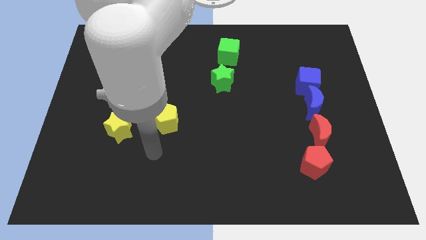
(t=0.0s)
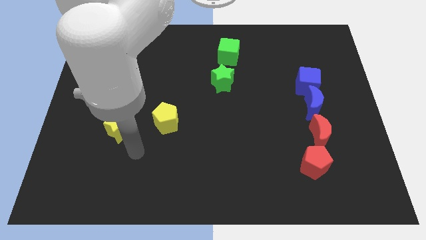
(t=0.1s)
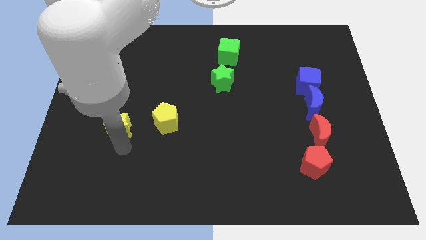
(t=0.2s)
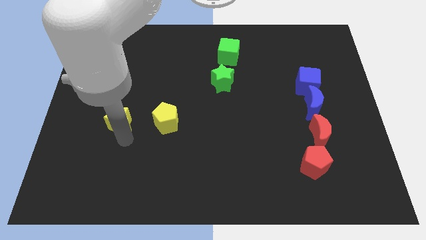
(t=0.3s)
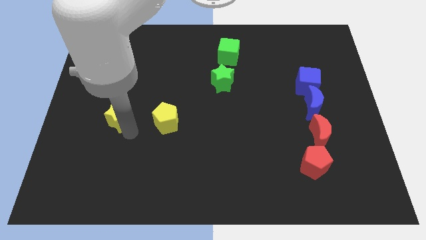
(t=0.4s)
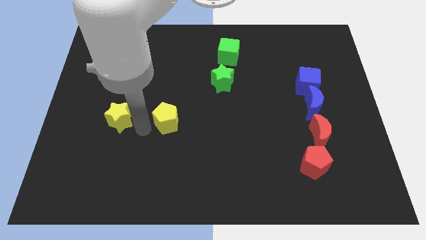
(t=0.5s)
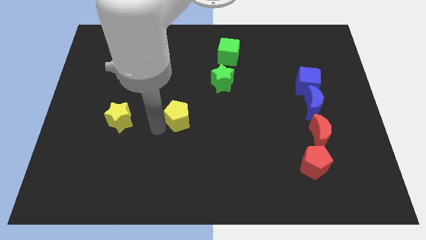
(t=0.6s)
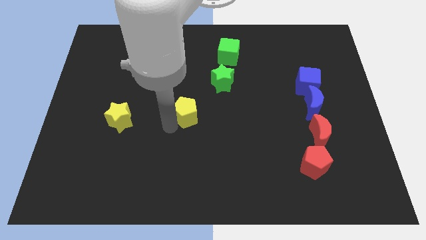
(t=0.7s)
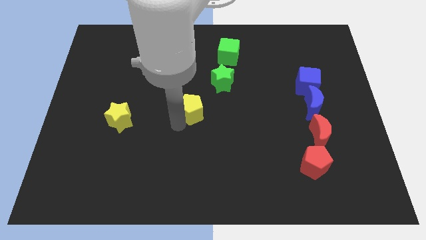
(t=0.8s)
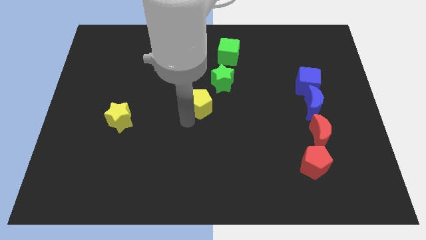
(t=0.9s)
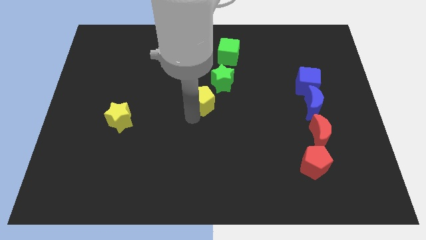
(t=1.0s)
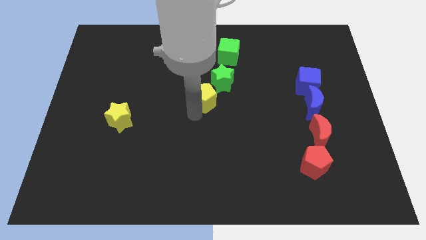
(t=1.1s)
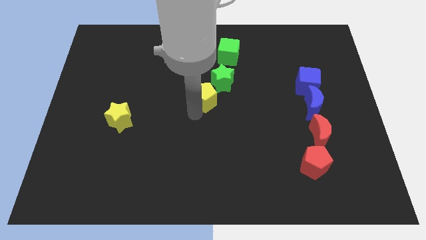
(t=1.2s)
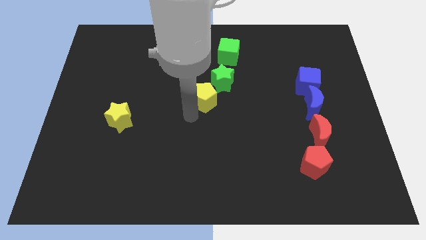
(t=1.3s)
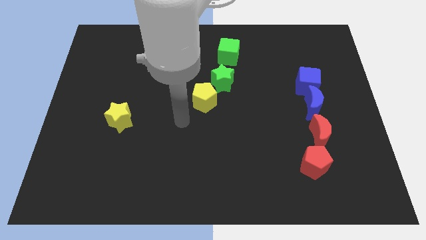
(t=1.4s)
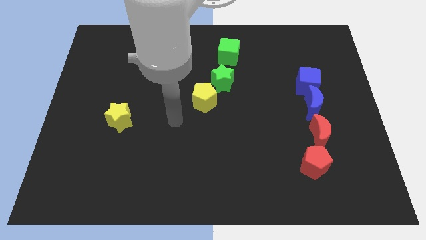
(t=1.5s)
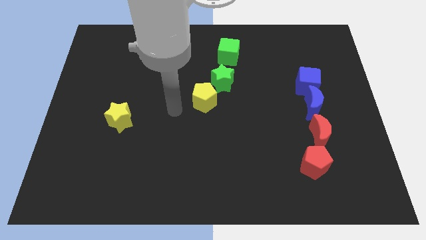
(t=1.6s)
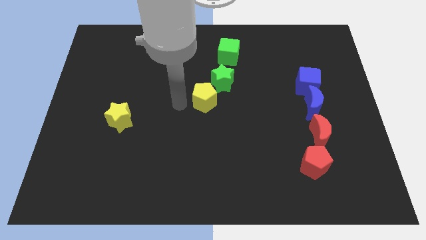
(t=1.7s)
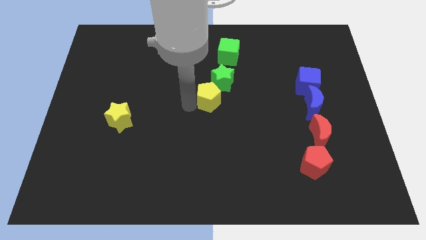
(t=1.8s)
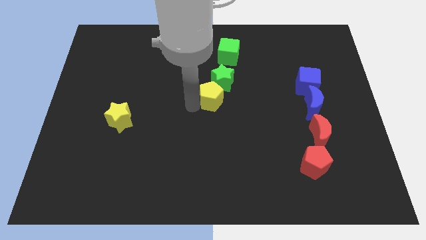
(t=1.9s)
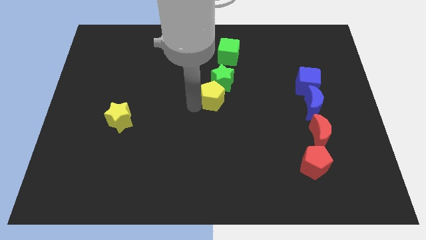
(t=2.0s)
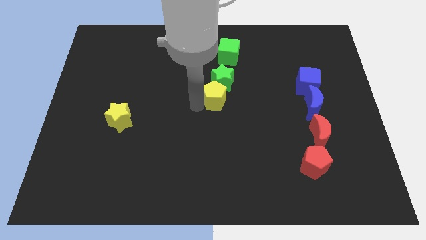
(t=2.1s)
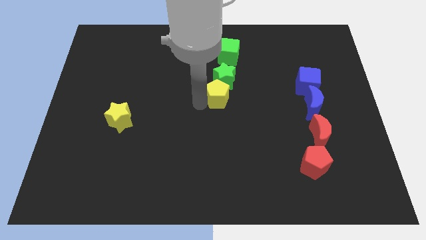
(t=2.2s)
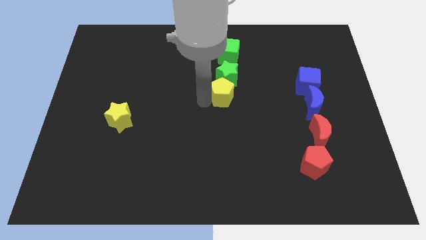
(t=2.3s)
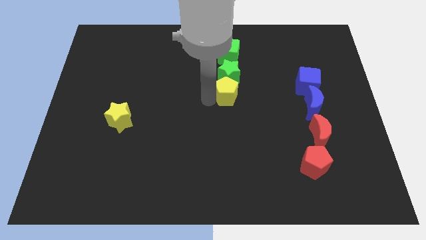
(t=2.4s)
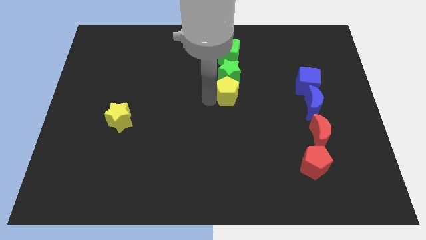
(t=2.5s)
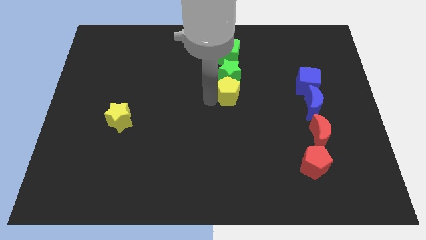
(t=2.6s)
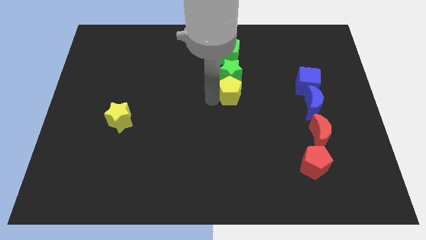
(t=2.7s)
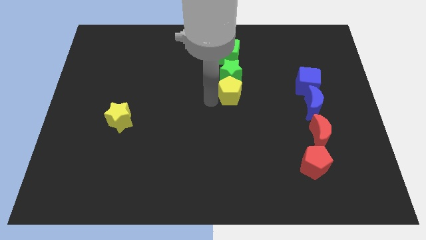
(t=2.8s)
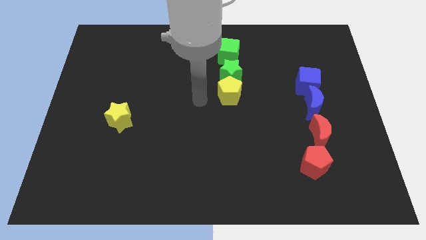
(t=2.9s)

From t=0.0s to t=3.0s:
move yellow pentagon at the bottom of green star

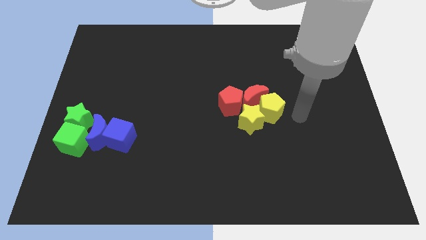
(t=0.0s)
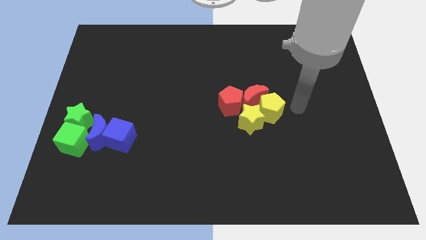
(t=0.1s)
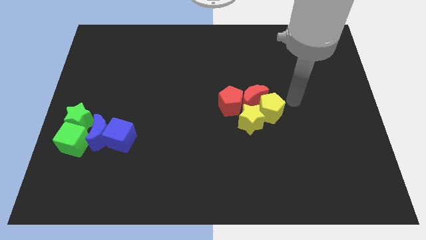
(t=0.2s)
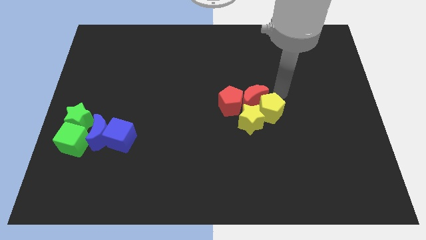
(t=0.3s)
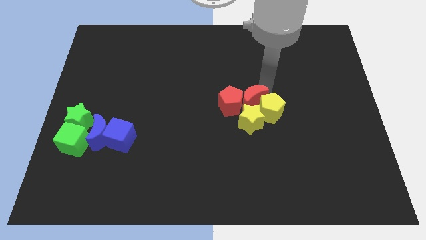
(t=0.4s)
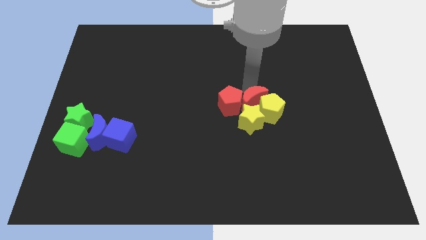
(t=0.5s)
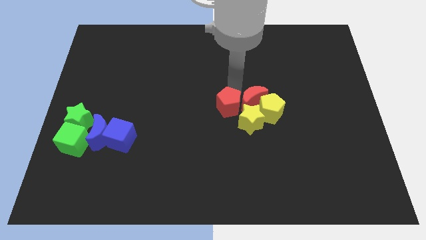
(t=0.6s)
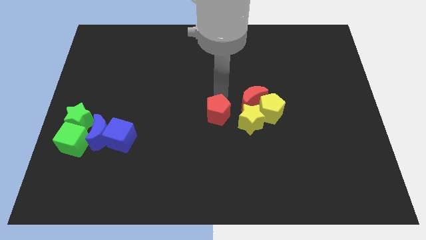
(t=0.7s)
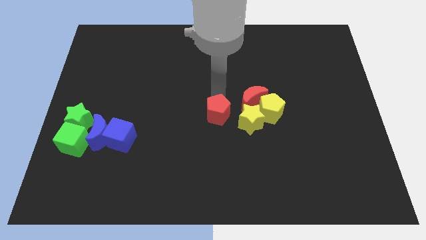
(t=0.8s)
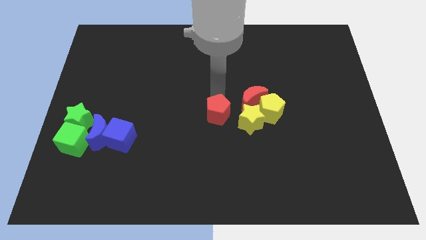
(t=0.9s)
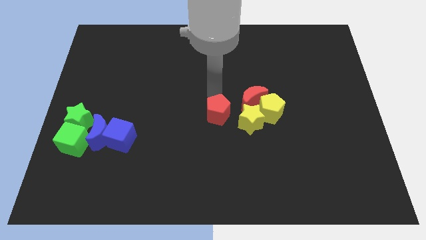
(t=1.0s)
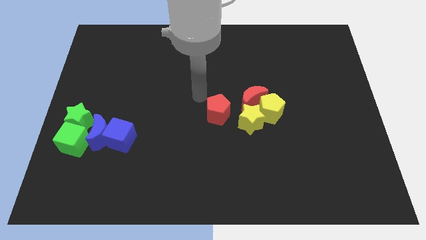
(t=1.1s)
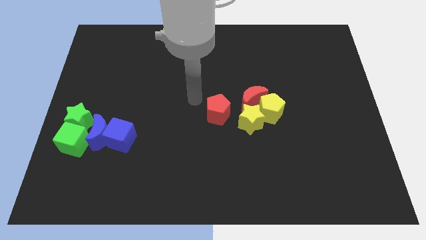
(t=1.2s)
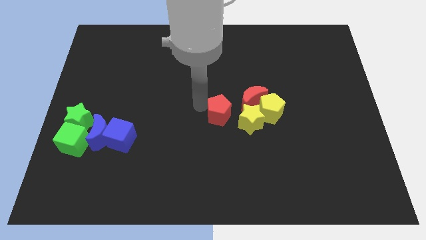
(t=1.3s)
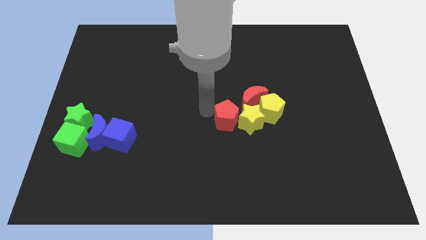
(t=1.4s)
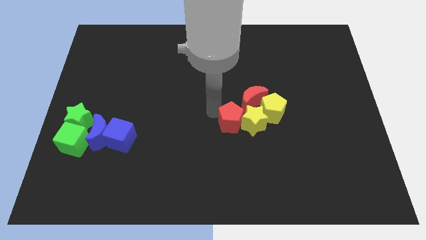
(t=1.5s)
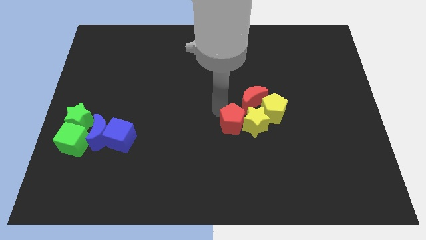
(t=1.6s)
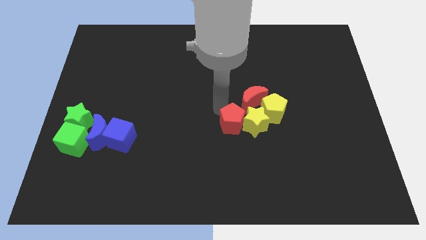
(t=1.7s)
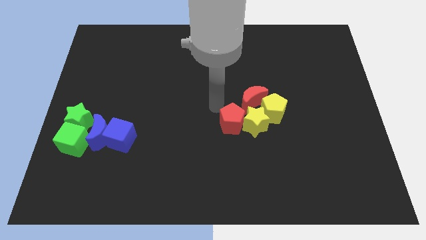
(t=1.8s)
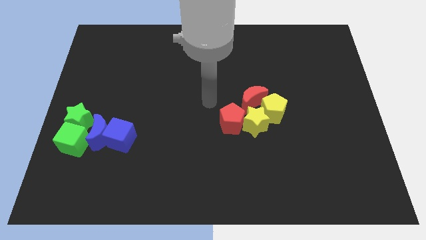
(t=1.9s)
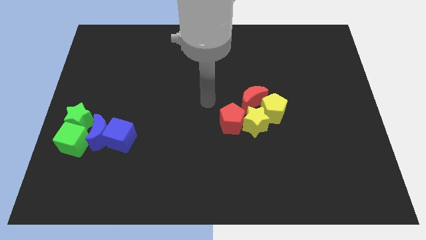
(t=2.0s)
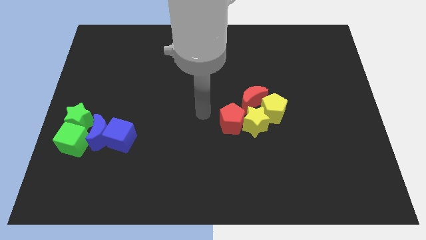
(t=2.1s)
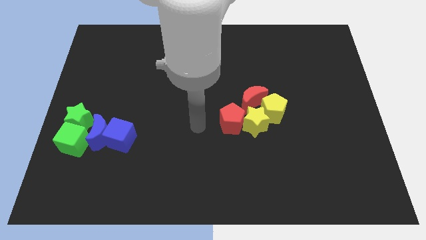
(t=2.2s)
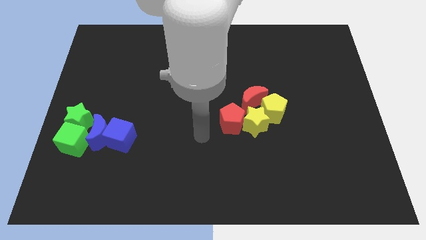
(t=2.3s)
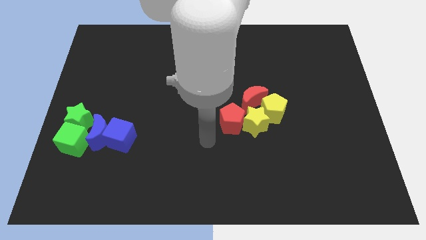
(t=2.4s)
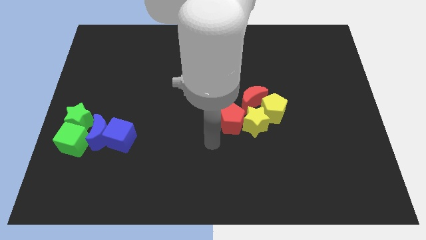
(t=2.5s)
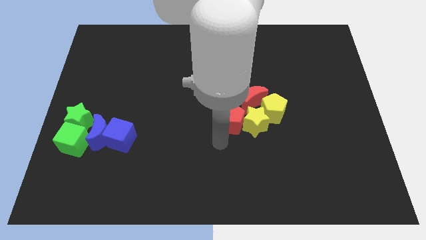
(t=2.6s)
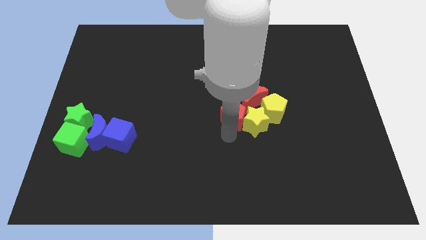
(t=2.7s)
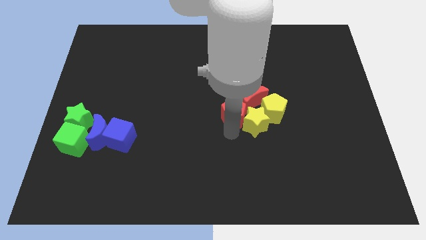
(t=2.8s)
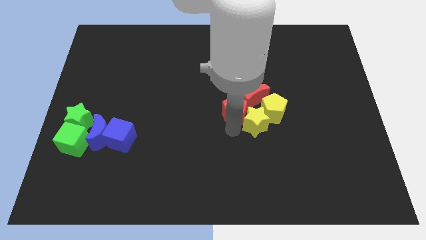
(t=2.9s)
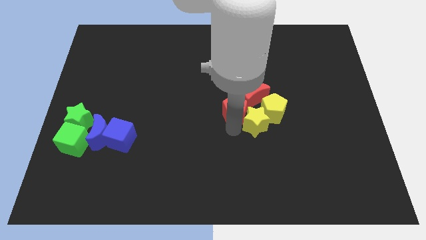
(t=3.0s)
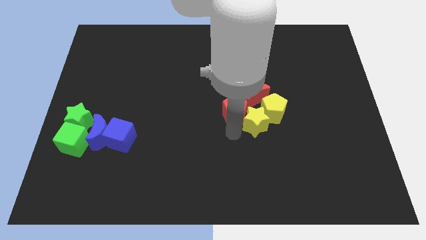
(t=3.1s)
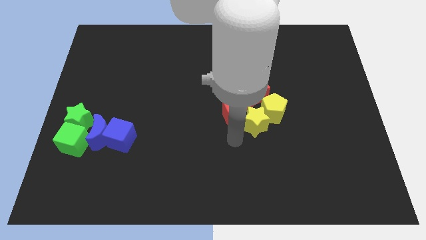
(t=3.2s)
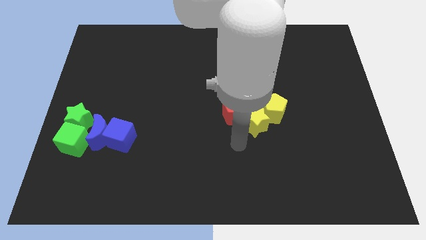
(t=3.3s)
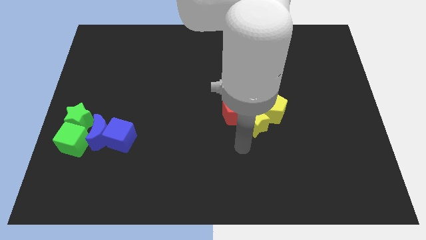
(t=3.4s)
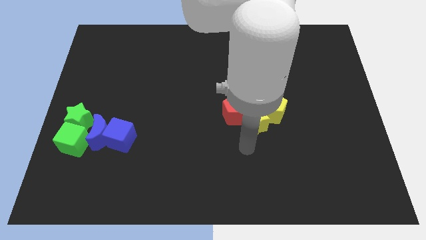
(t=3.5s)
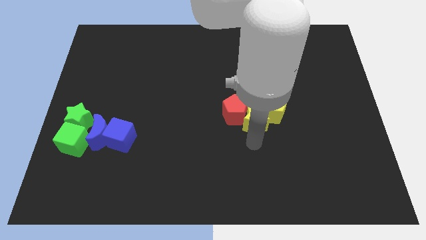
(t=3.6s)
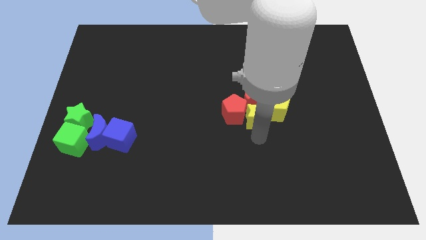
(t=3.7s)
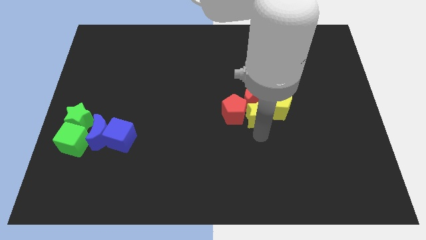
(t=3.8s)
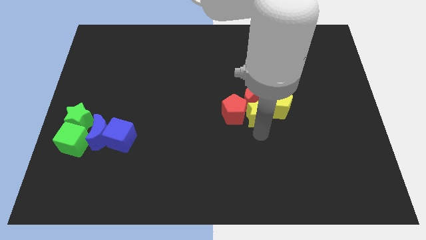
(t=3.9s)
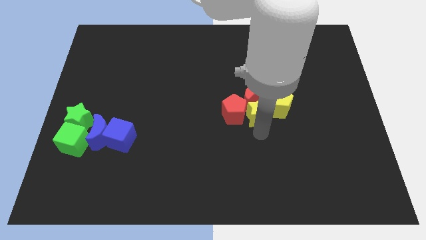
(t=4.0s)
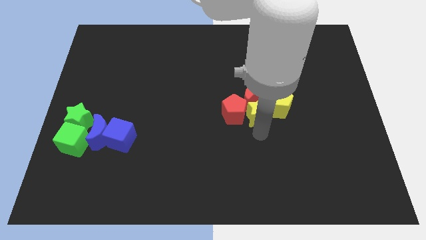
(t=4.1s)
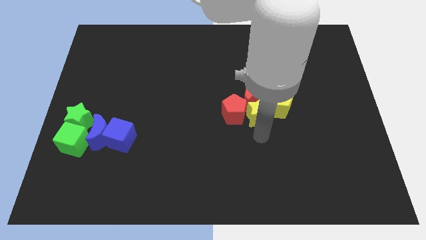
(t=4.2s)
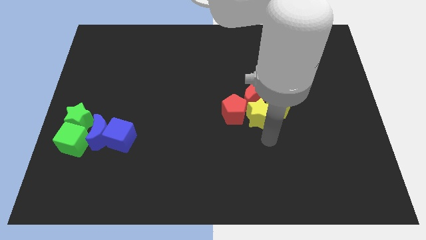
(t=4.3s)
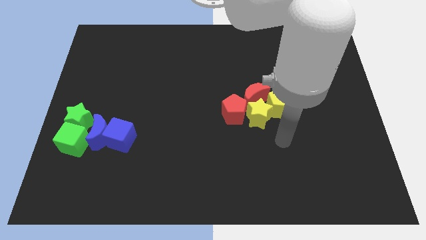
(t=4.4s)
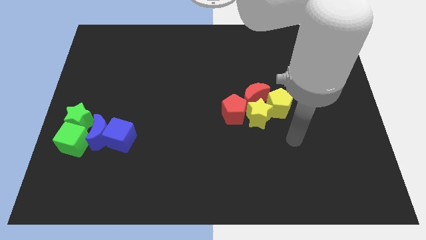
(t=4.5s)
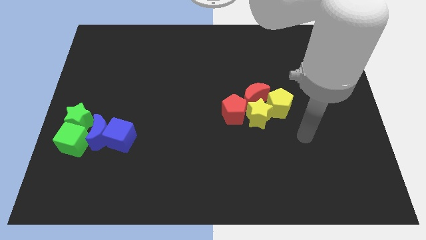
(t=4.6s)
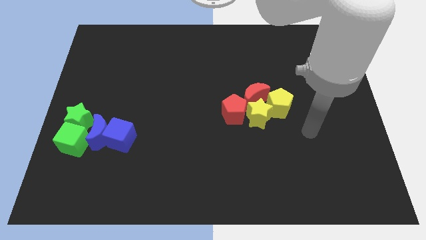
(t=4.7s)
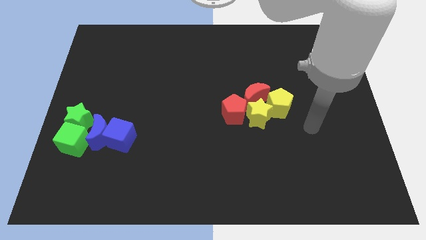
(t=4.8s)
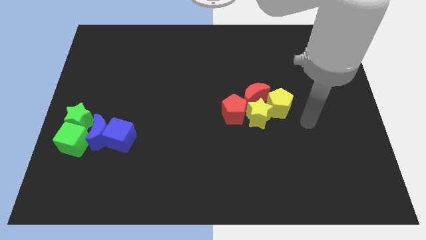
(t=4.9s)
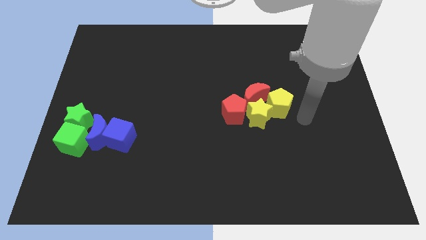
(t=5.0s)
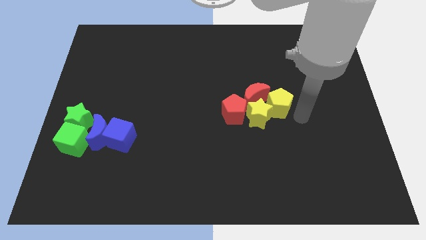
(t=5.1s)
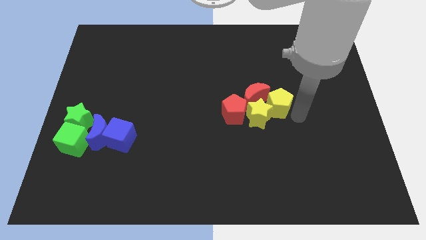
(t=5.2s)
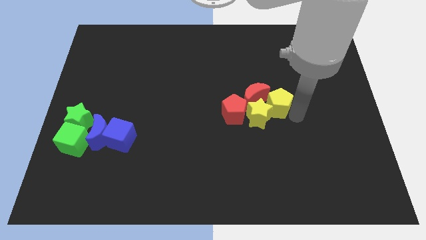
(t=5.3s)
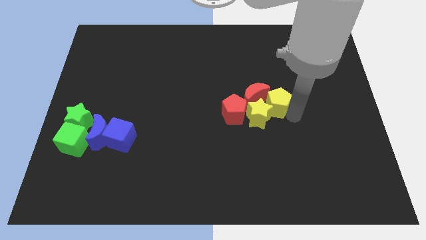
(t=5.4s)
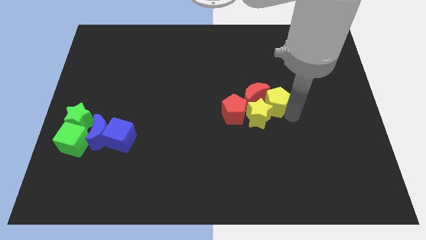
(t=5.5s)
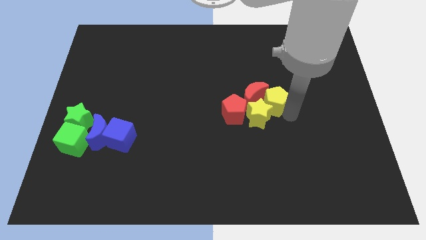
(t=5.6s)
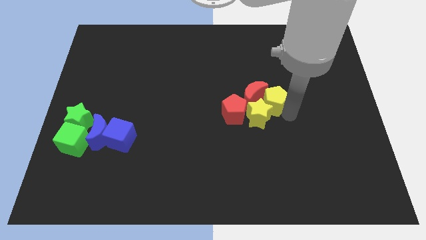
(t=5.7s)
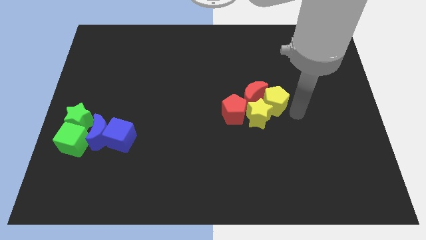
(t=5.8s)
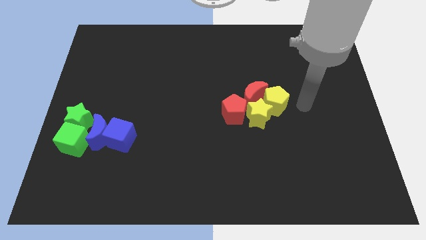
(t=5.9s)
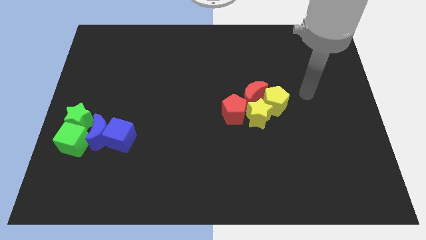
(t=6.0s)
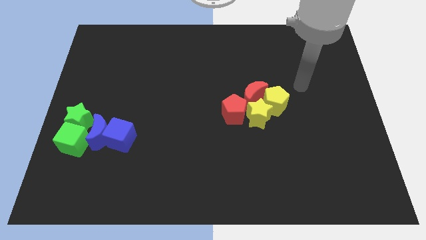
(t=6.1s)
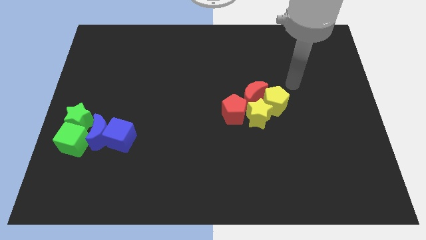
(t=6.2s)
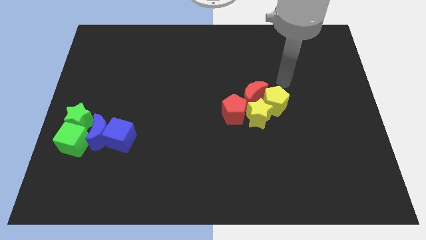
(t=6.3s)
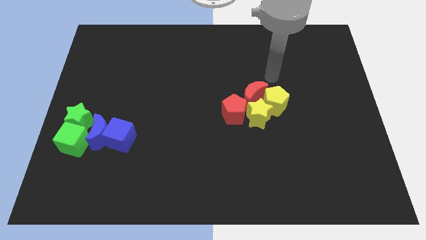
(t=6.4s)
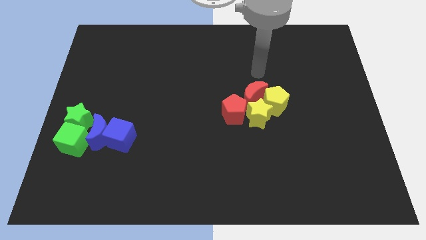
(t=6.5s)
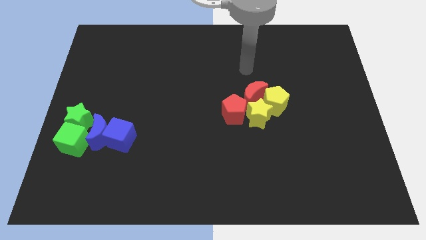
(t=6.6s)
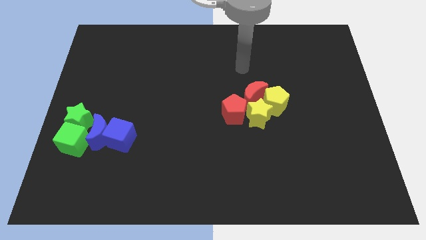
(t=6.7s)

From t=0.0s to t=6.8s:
slightly push the yellow pentagon into the red moon
